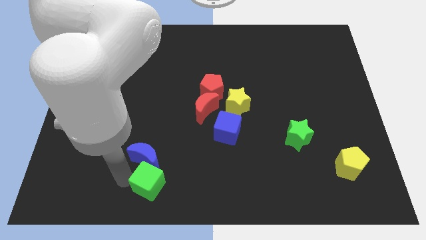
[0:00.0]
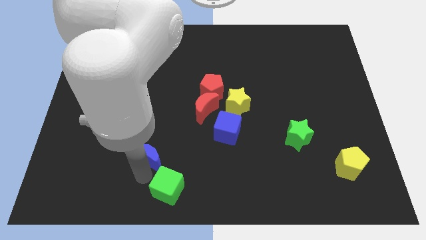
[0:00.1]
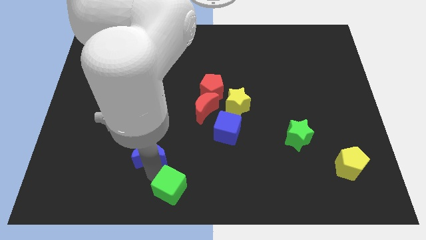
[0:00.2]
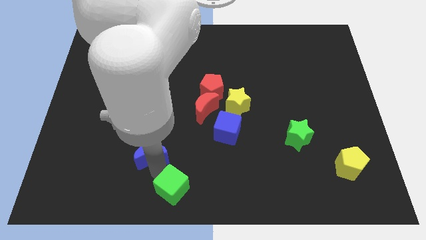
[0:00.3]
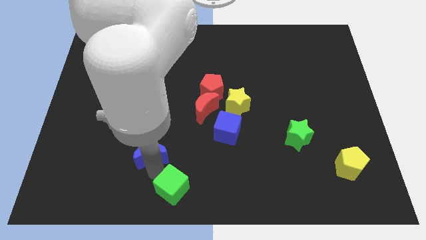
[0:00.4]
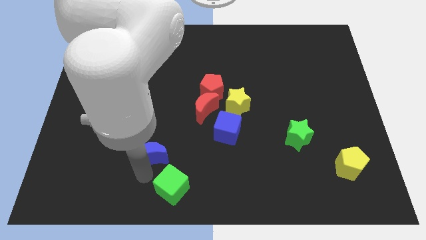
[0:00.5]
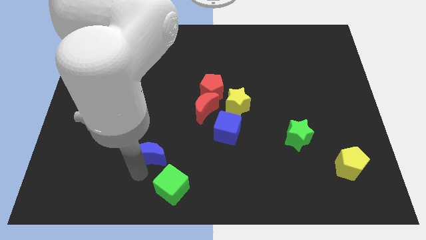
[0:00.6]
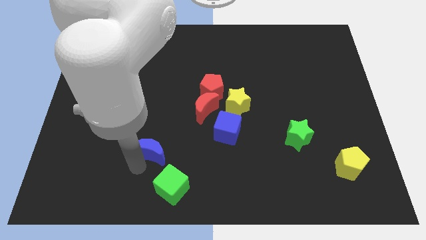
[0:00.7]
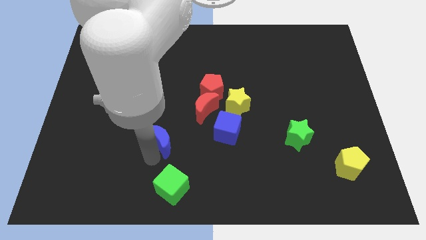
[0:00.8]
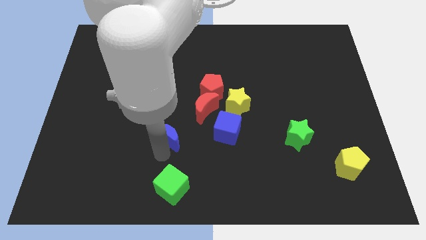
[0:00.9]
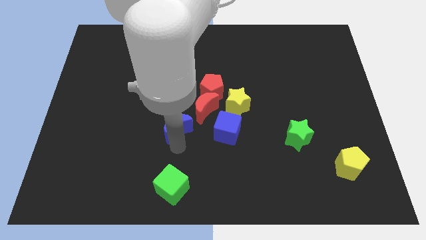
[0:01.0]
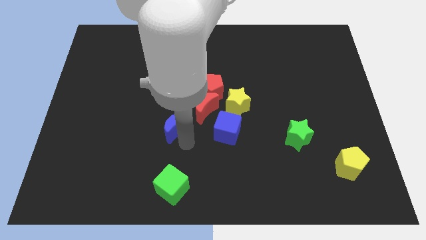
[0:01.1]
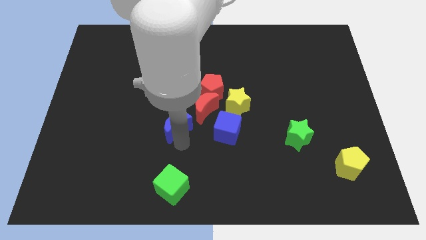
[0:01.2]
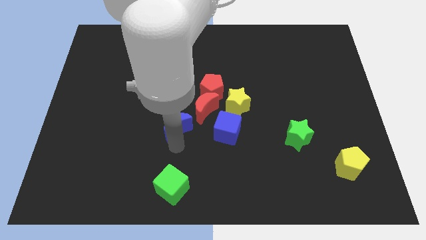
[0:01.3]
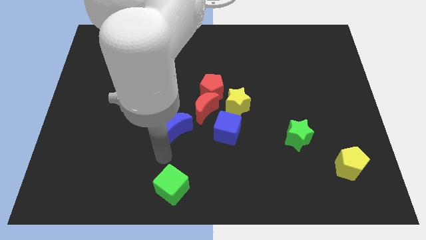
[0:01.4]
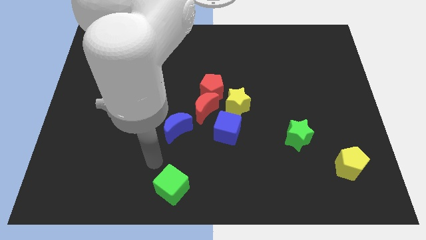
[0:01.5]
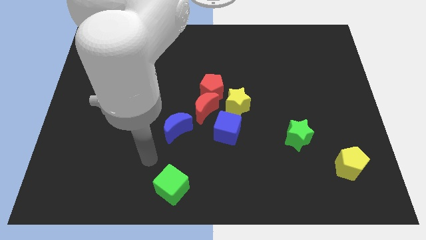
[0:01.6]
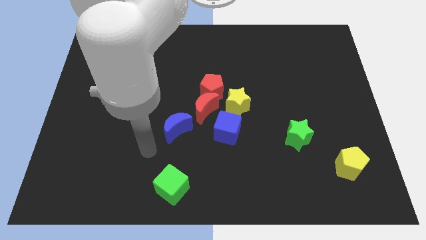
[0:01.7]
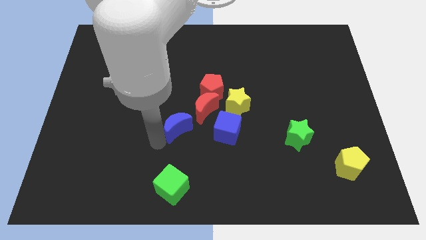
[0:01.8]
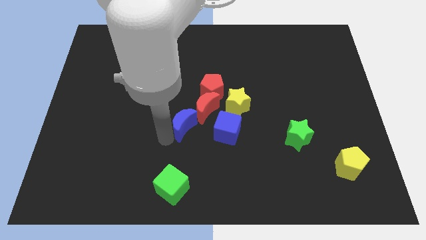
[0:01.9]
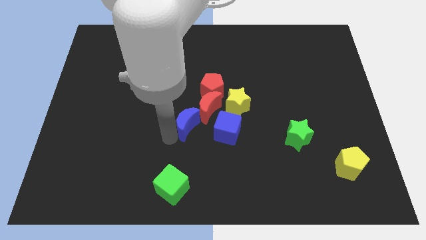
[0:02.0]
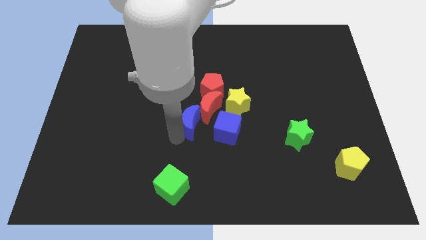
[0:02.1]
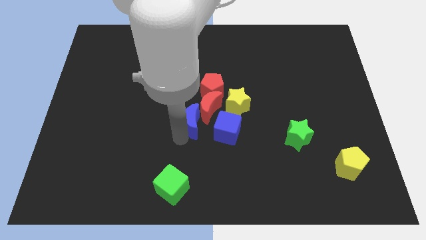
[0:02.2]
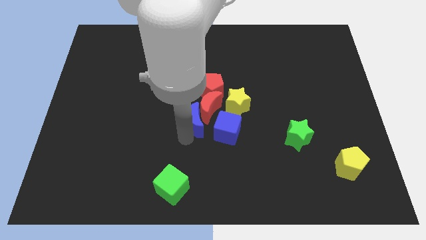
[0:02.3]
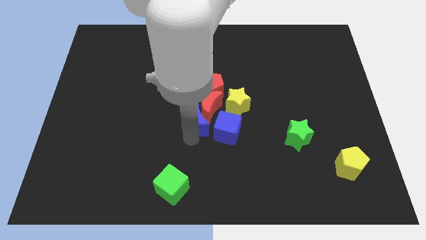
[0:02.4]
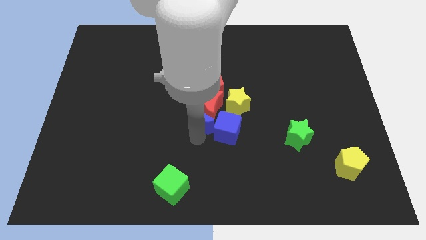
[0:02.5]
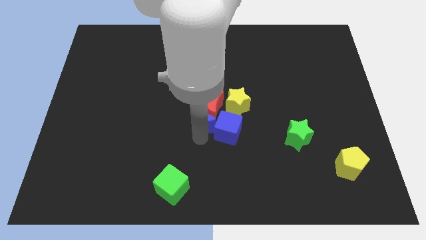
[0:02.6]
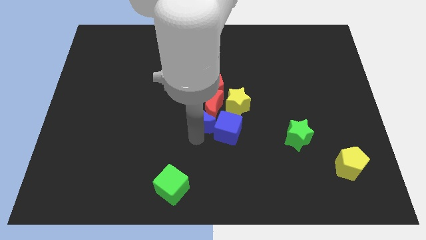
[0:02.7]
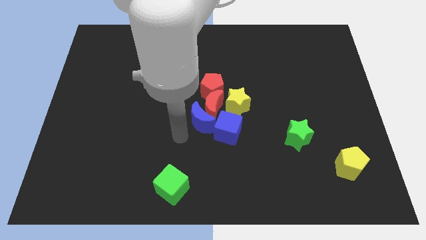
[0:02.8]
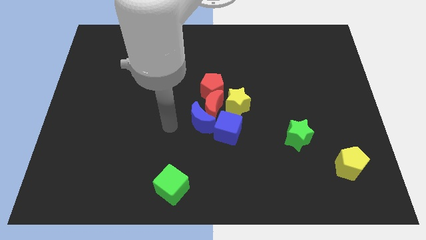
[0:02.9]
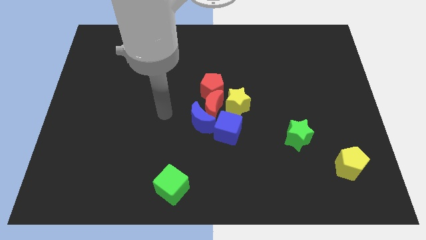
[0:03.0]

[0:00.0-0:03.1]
slide the blue crescent into the group of blocks

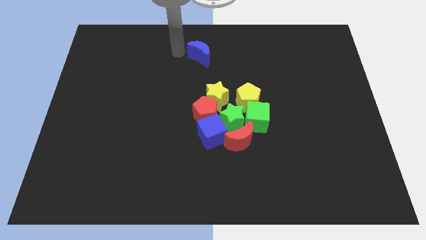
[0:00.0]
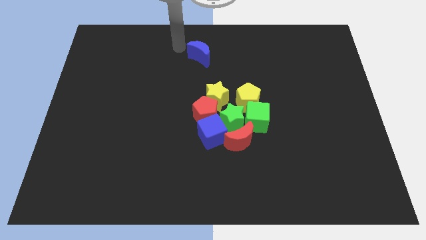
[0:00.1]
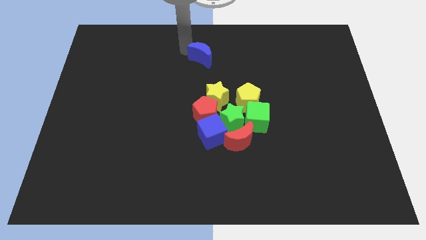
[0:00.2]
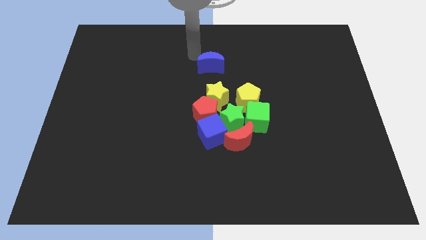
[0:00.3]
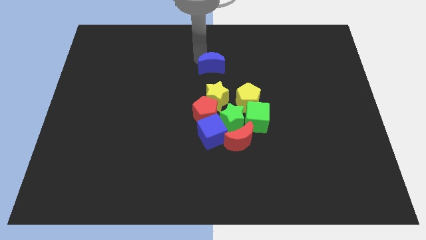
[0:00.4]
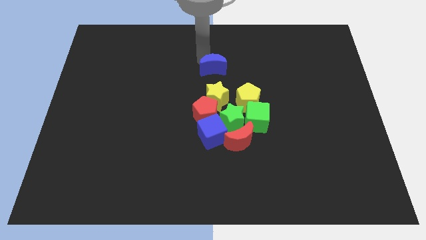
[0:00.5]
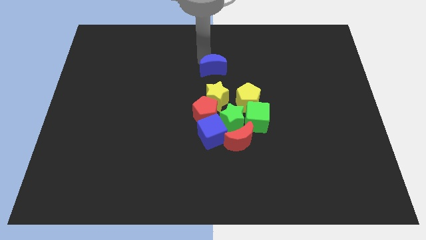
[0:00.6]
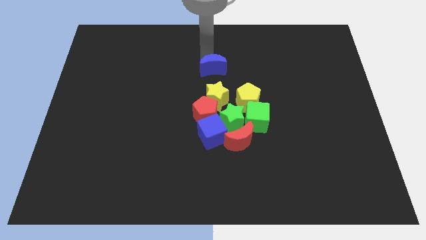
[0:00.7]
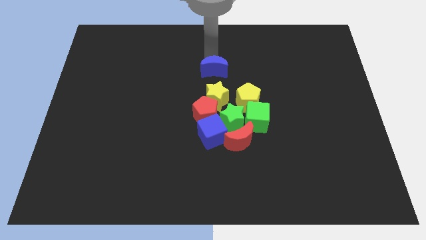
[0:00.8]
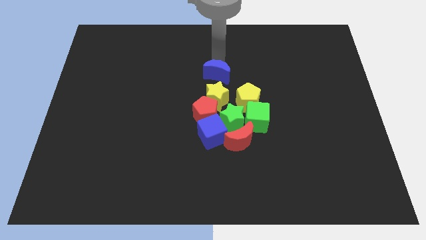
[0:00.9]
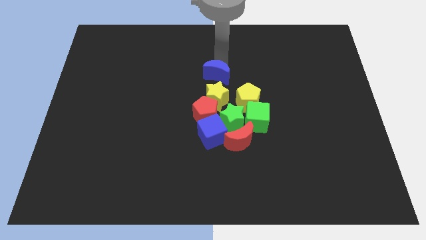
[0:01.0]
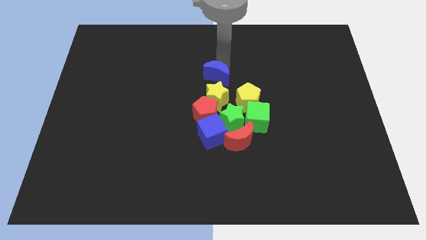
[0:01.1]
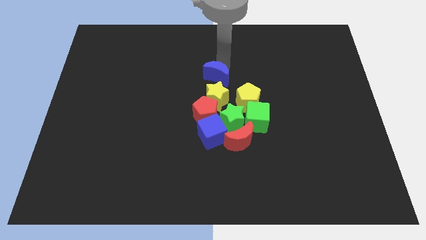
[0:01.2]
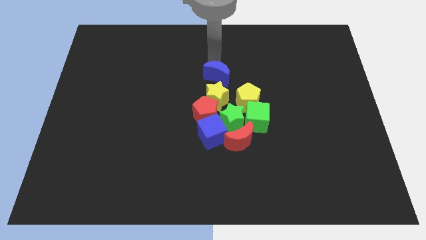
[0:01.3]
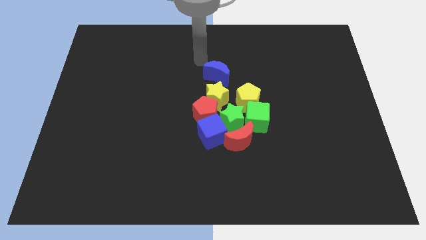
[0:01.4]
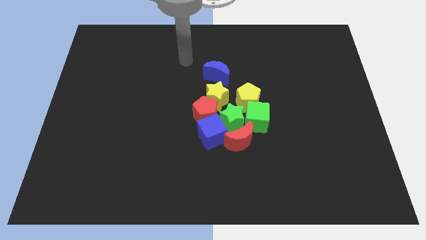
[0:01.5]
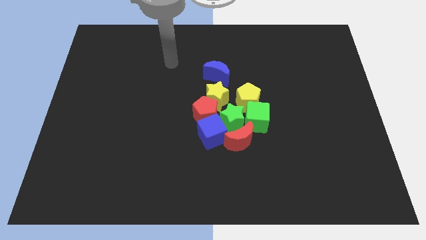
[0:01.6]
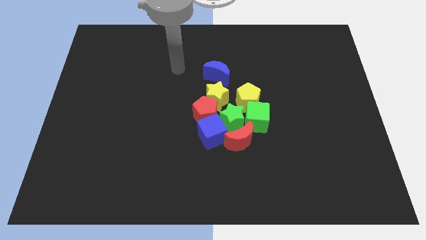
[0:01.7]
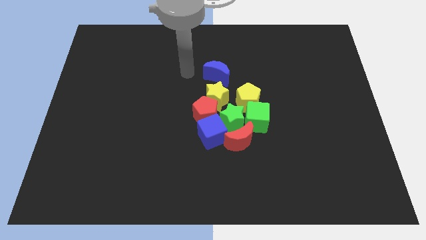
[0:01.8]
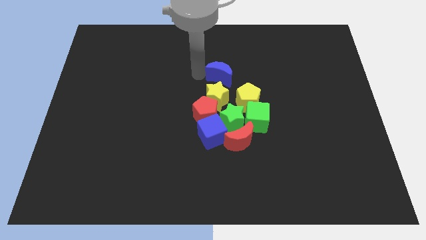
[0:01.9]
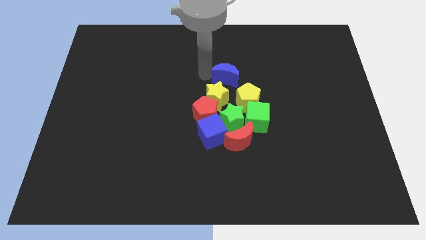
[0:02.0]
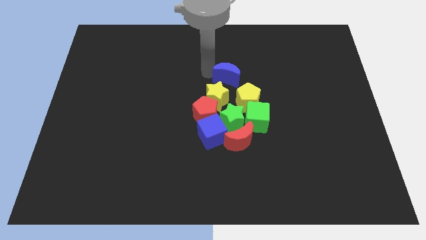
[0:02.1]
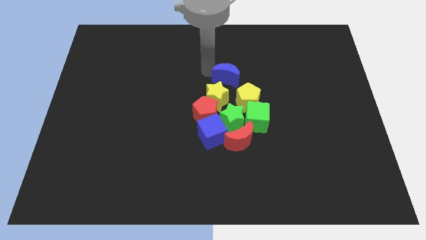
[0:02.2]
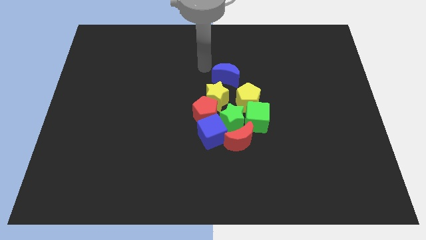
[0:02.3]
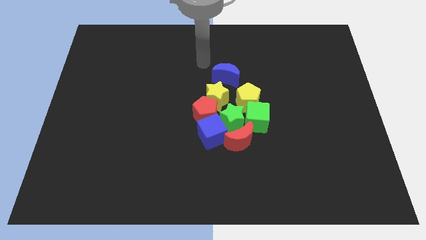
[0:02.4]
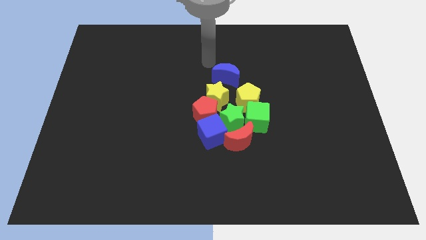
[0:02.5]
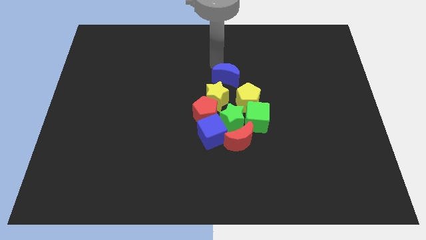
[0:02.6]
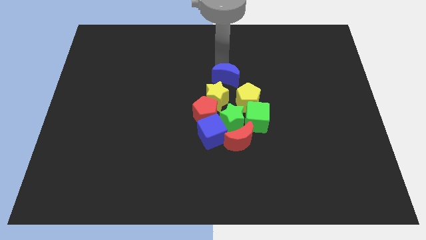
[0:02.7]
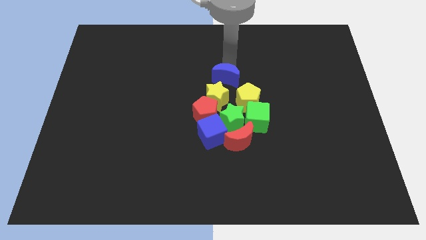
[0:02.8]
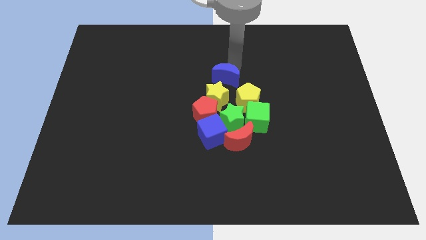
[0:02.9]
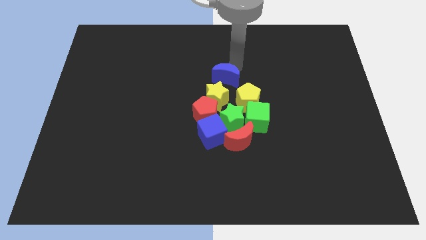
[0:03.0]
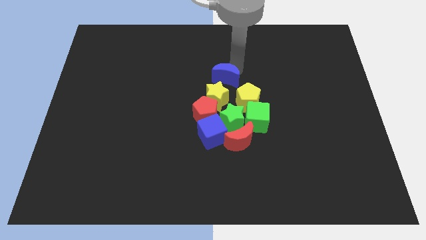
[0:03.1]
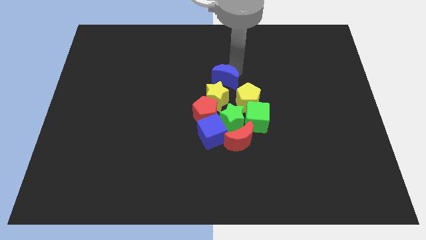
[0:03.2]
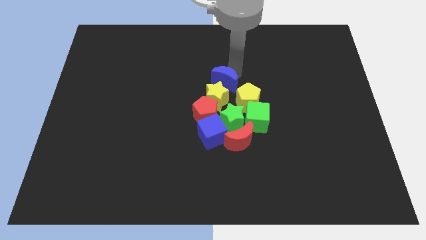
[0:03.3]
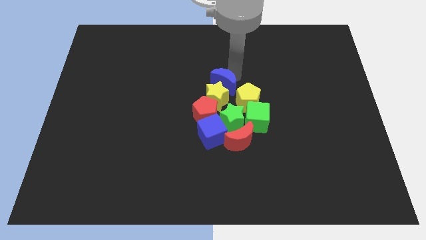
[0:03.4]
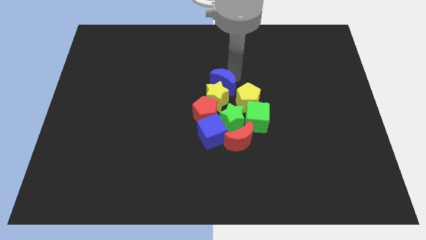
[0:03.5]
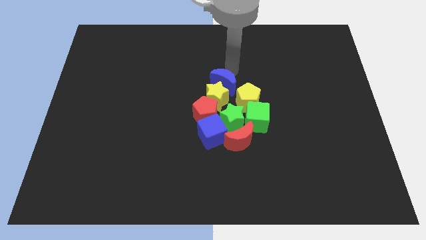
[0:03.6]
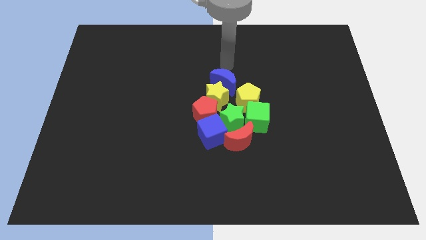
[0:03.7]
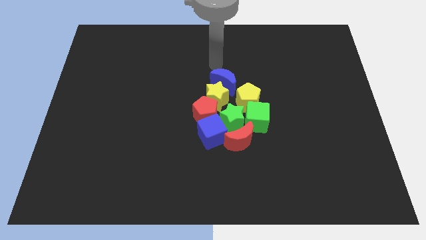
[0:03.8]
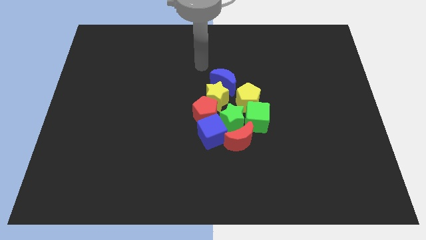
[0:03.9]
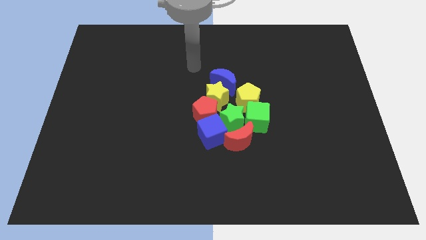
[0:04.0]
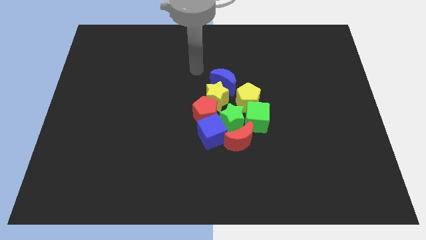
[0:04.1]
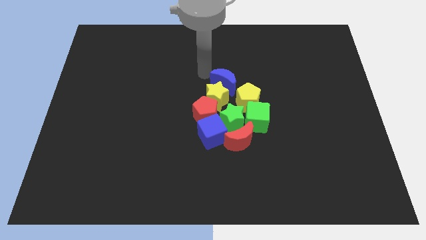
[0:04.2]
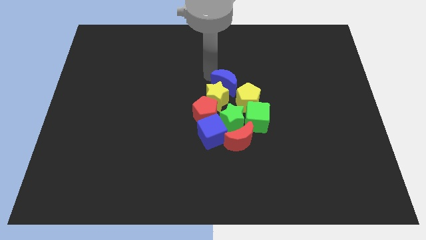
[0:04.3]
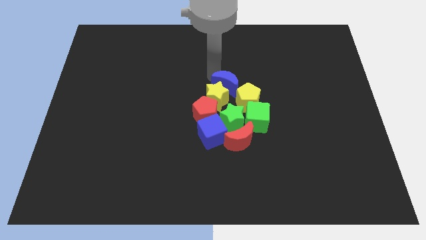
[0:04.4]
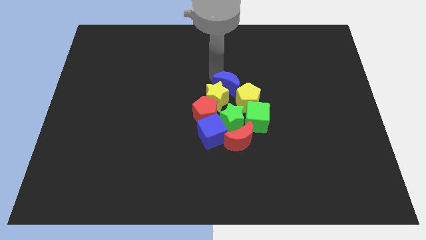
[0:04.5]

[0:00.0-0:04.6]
push the blue crescent on top of the yellow star

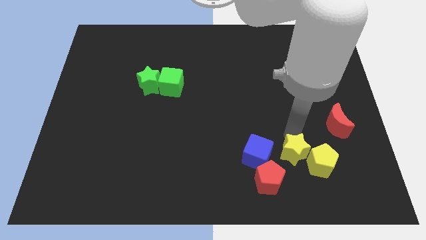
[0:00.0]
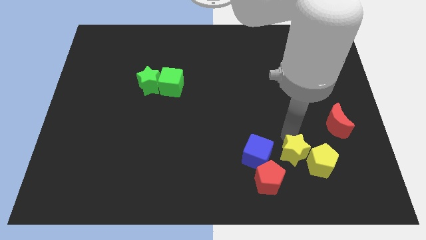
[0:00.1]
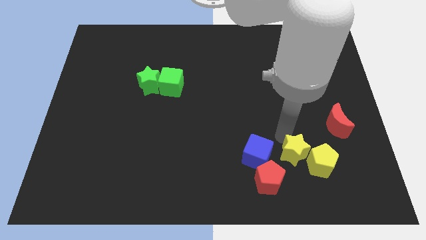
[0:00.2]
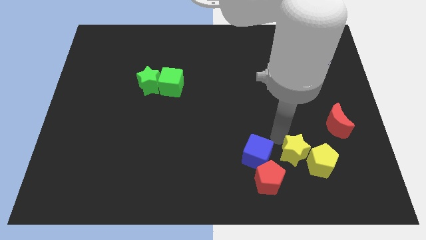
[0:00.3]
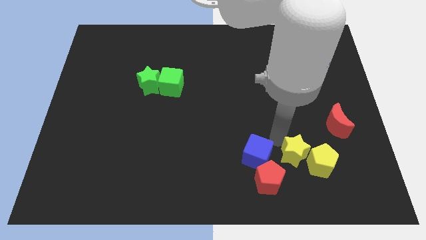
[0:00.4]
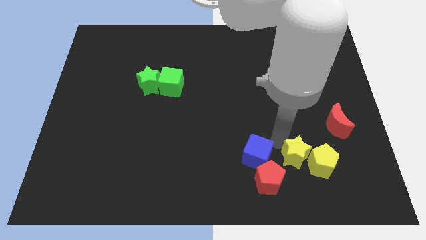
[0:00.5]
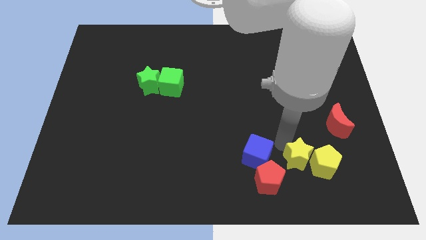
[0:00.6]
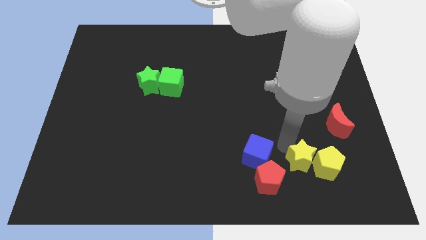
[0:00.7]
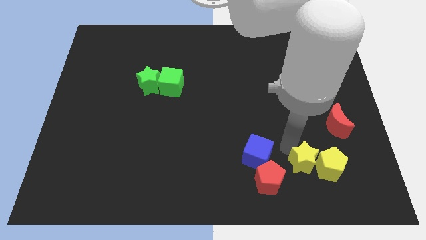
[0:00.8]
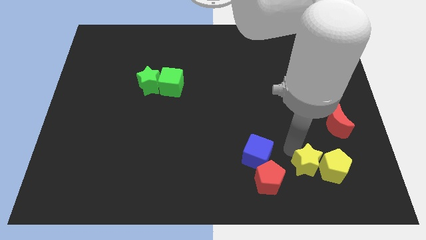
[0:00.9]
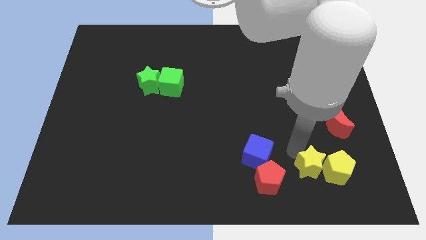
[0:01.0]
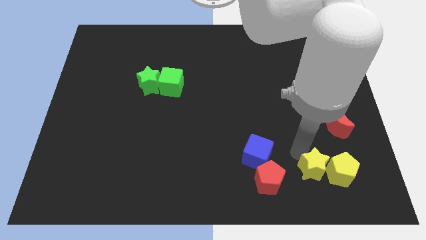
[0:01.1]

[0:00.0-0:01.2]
push the yellow pentagon with the yellow star towards the right bottom of the board
